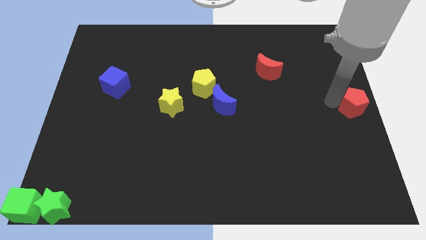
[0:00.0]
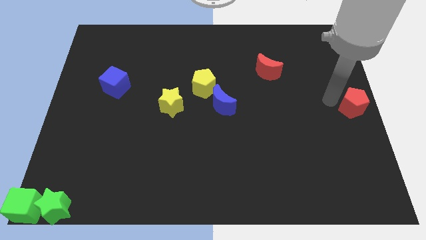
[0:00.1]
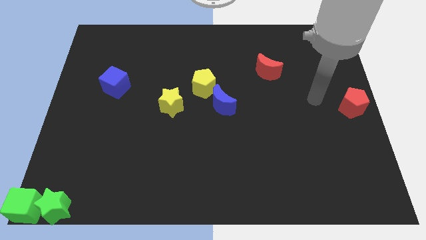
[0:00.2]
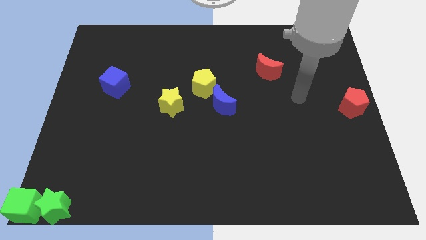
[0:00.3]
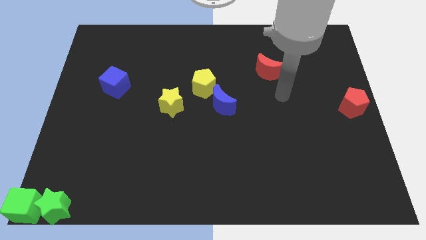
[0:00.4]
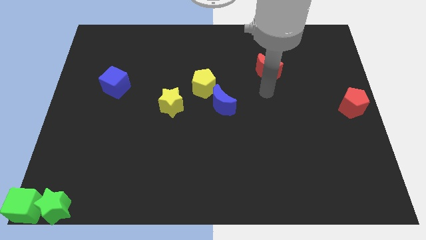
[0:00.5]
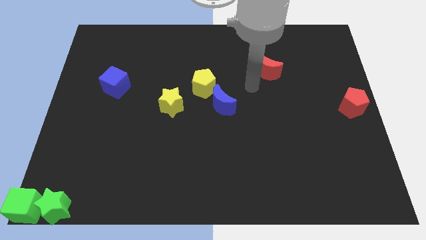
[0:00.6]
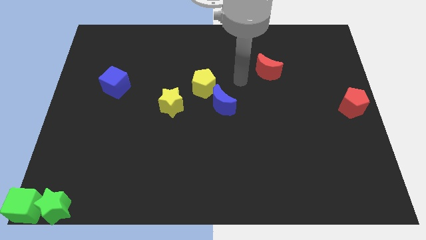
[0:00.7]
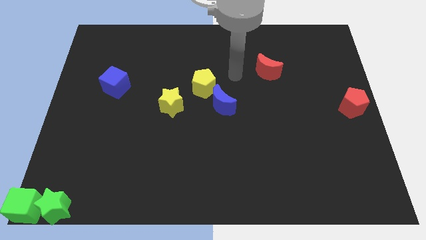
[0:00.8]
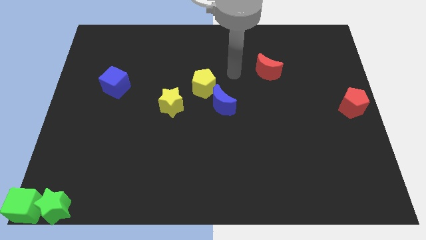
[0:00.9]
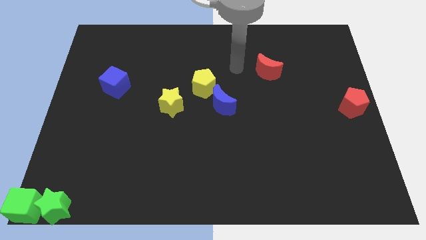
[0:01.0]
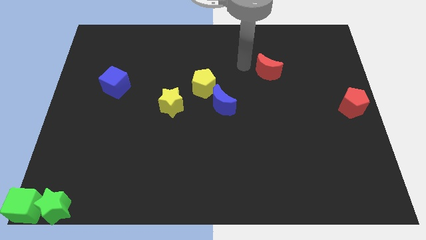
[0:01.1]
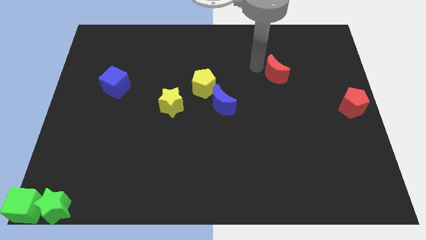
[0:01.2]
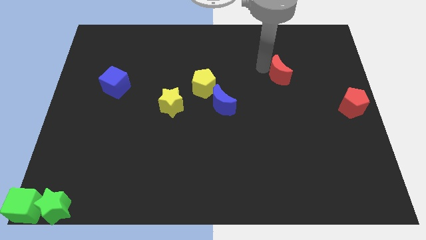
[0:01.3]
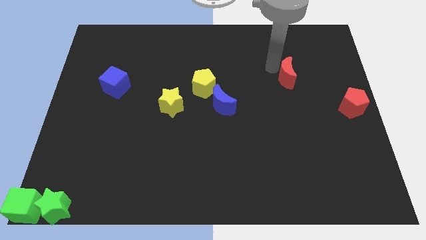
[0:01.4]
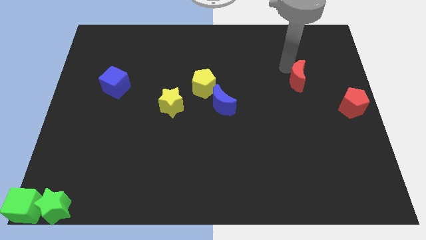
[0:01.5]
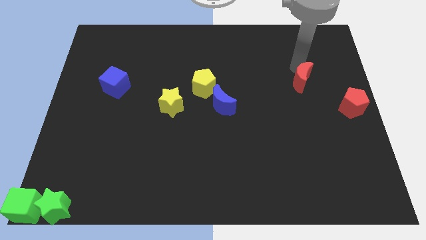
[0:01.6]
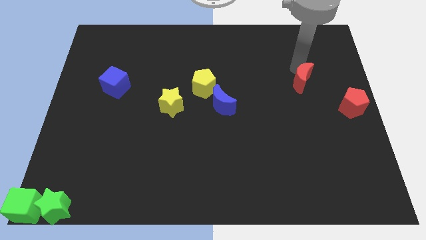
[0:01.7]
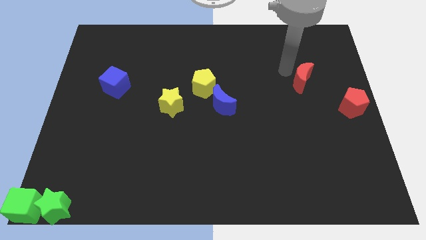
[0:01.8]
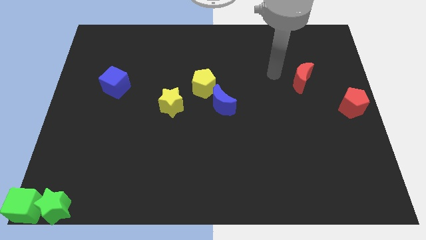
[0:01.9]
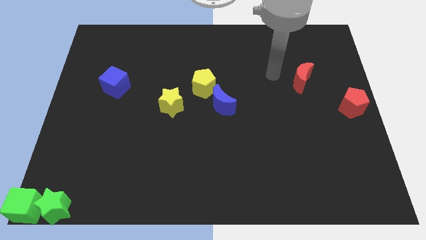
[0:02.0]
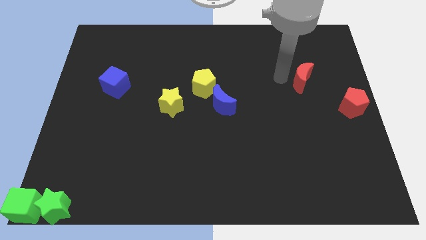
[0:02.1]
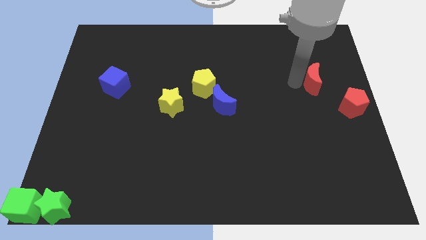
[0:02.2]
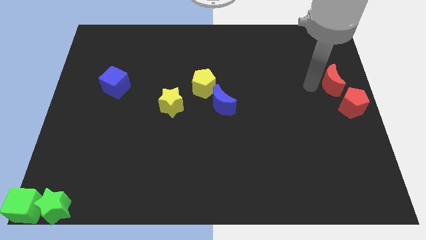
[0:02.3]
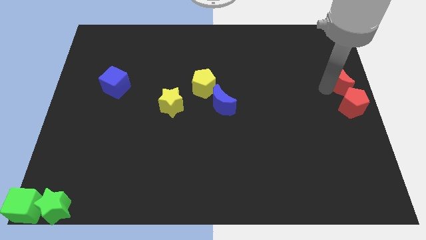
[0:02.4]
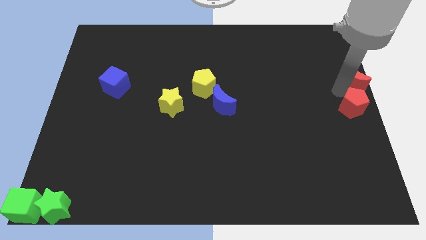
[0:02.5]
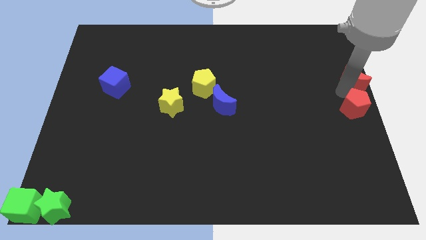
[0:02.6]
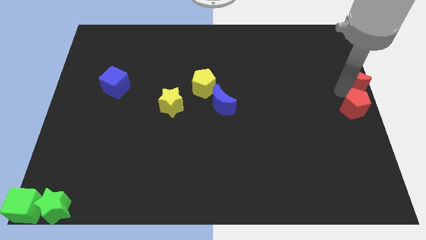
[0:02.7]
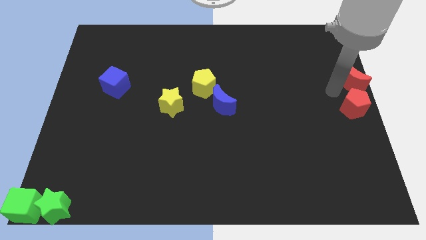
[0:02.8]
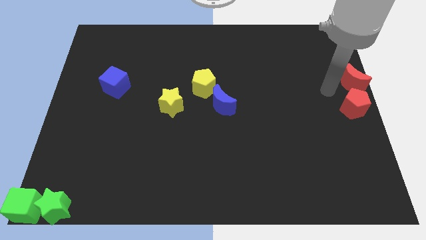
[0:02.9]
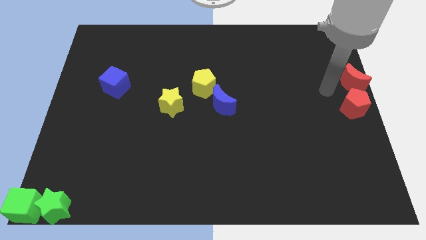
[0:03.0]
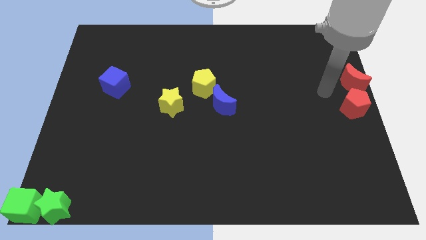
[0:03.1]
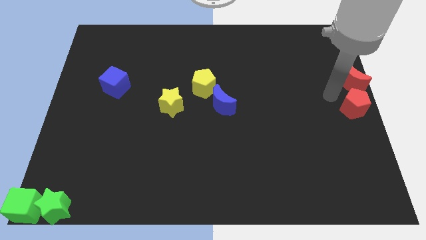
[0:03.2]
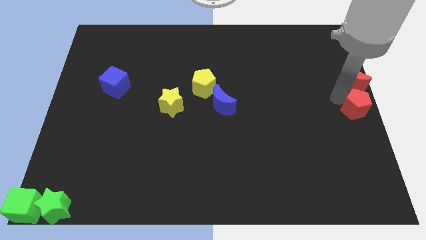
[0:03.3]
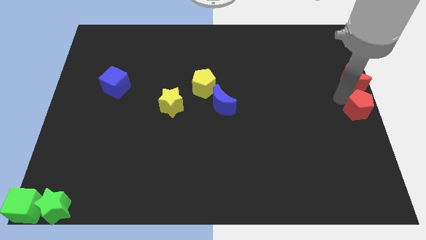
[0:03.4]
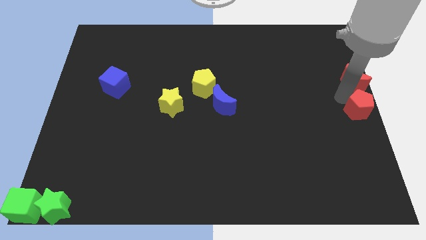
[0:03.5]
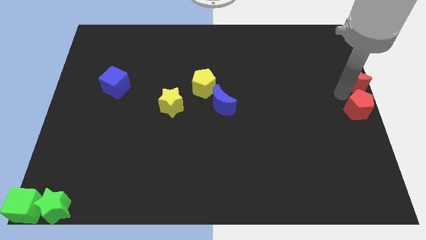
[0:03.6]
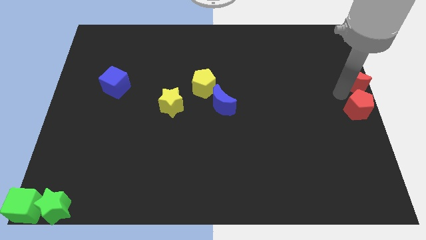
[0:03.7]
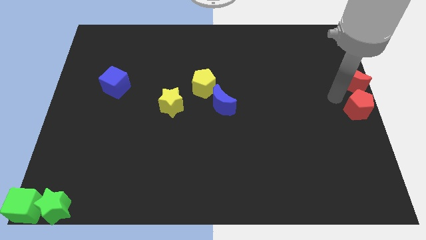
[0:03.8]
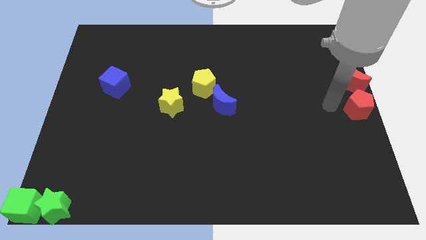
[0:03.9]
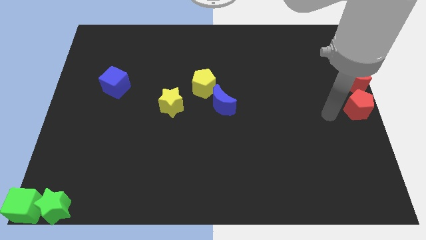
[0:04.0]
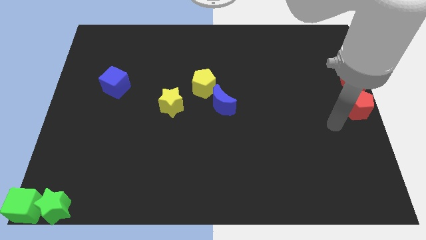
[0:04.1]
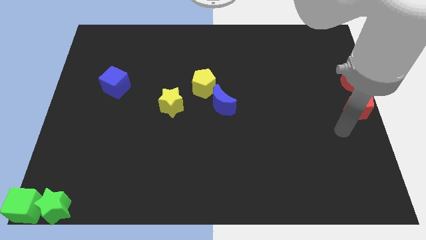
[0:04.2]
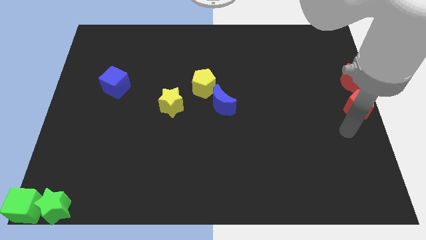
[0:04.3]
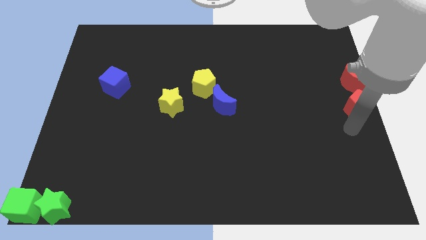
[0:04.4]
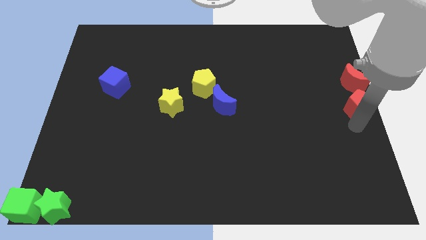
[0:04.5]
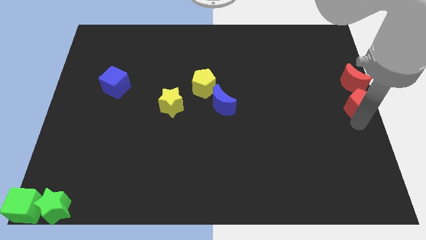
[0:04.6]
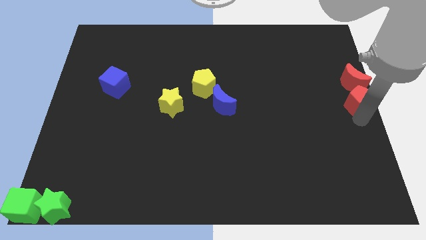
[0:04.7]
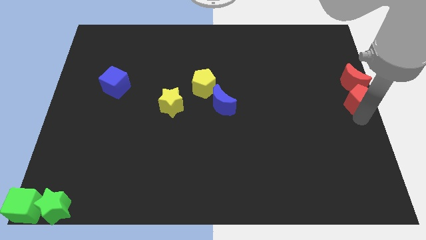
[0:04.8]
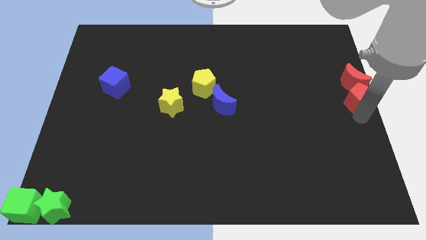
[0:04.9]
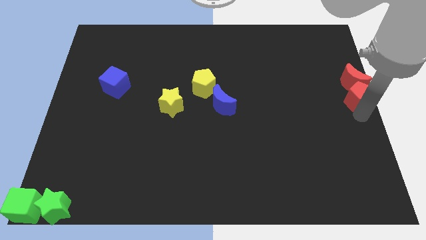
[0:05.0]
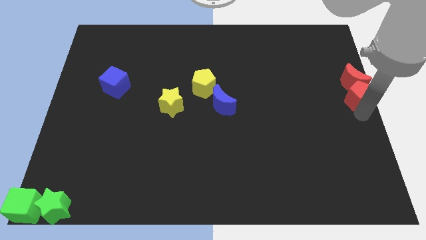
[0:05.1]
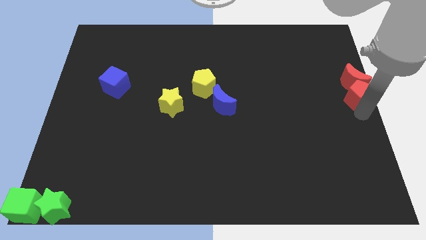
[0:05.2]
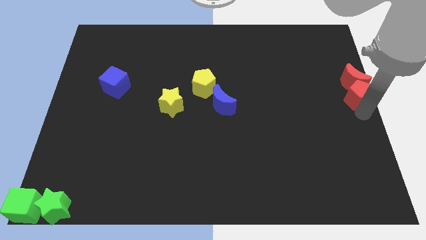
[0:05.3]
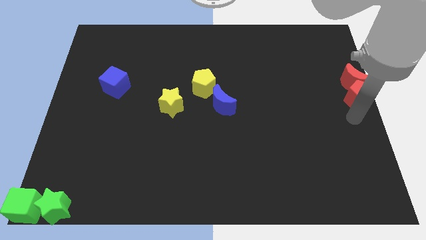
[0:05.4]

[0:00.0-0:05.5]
put the red crescent and red pentagon together at the right side of the table

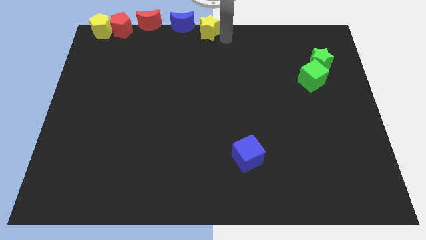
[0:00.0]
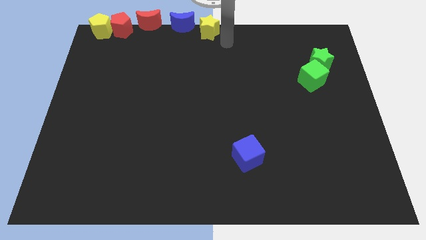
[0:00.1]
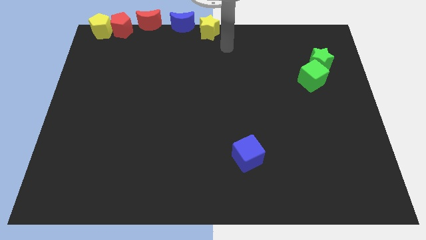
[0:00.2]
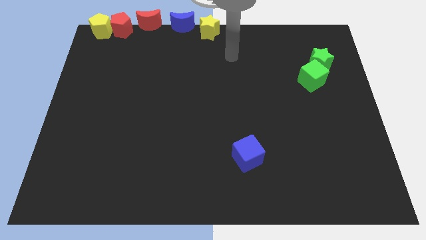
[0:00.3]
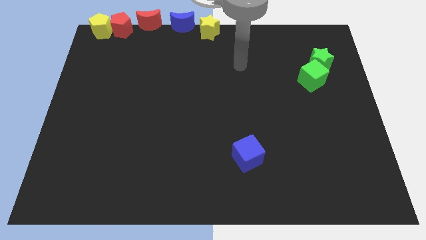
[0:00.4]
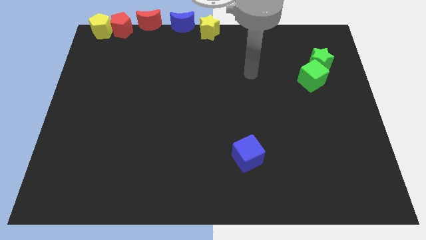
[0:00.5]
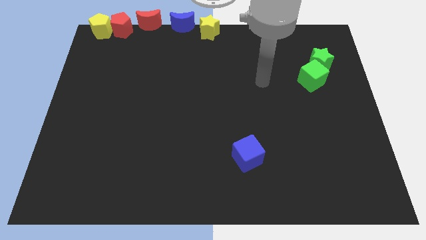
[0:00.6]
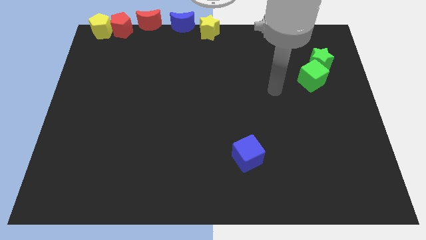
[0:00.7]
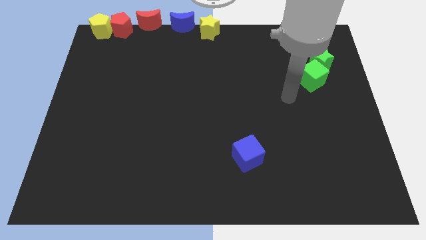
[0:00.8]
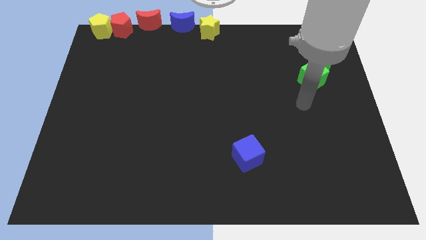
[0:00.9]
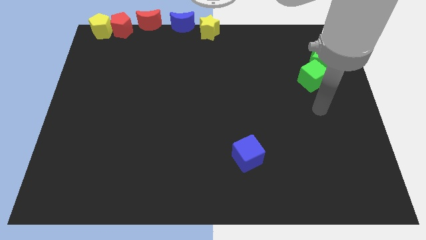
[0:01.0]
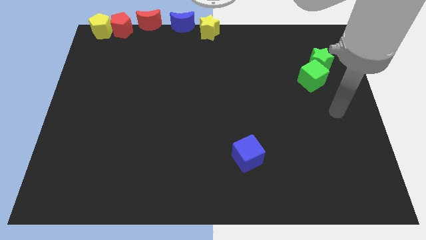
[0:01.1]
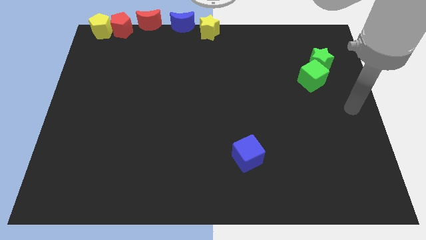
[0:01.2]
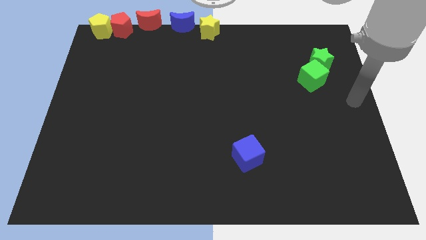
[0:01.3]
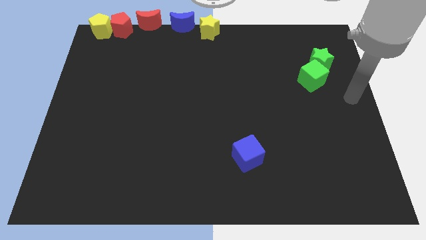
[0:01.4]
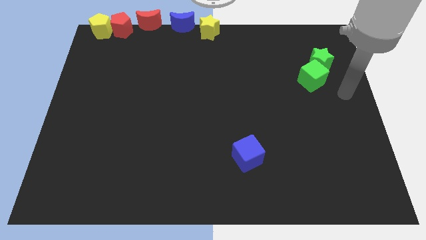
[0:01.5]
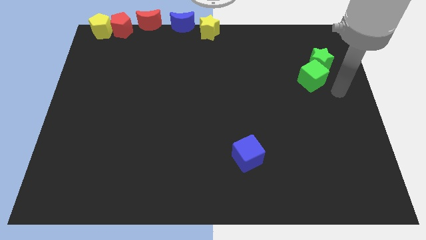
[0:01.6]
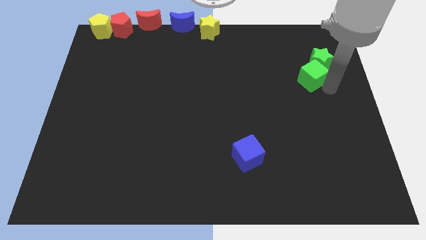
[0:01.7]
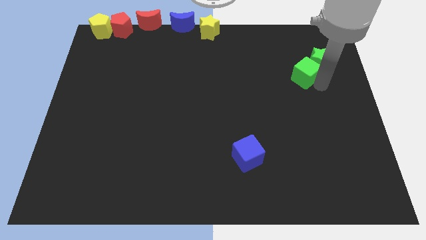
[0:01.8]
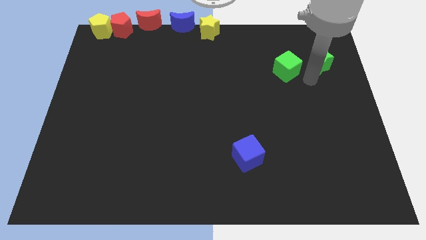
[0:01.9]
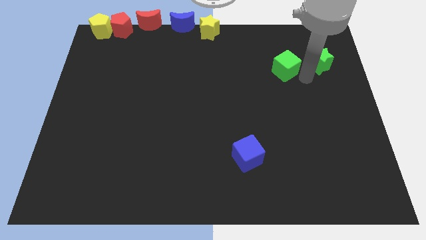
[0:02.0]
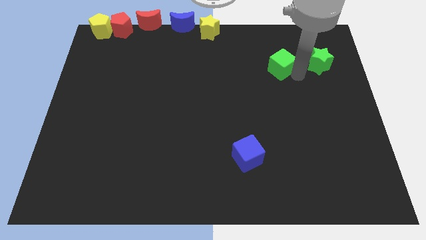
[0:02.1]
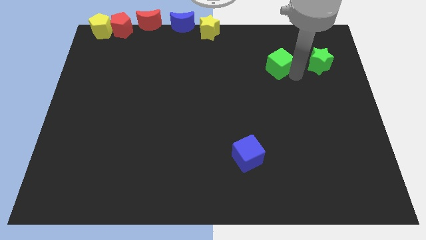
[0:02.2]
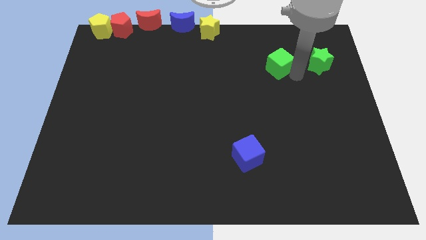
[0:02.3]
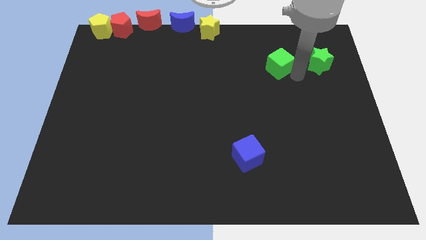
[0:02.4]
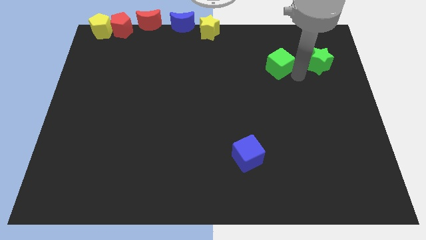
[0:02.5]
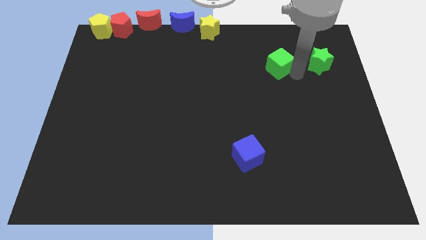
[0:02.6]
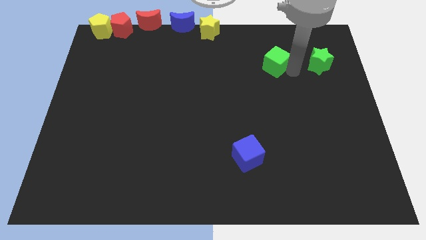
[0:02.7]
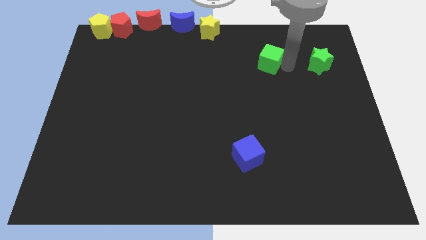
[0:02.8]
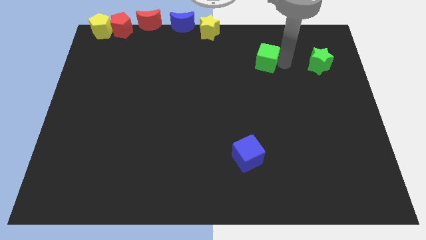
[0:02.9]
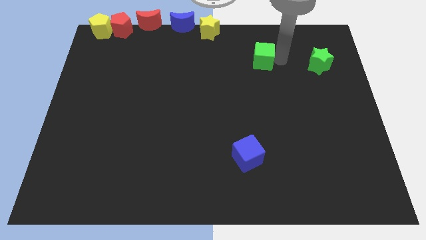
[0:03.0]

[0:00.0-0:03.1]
push the green cube to the top left of the blue cube

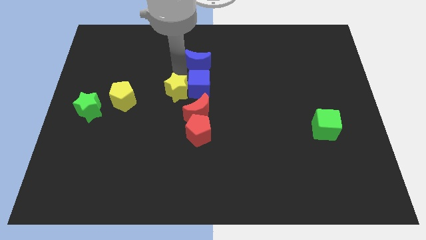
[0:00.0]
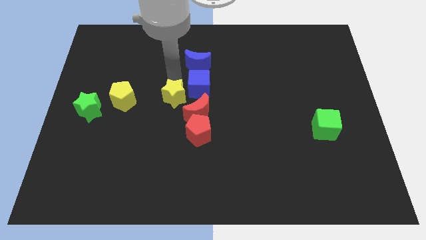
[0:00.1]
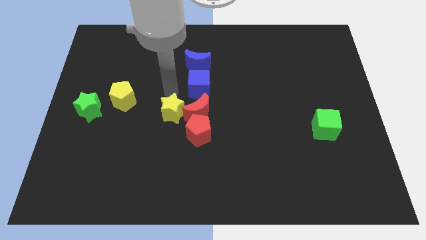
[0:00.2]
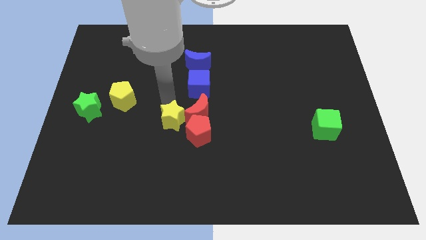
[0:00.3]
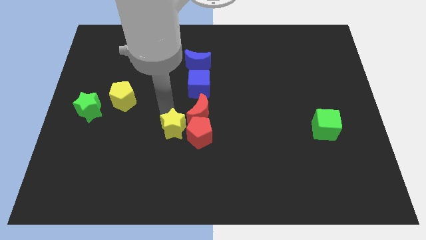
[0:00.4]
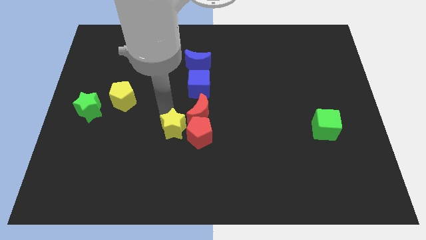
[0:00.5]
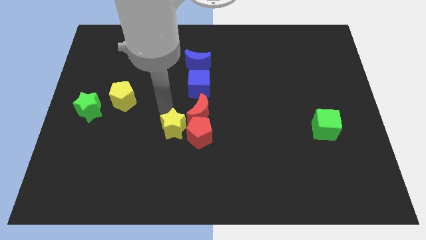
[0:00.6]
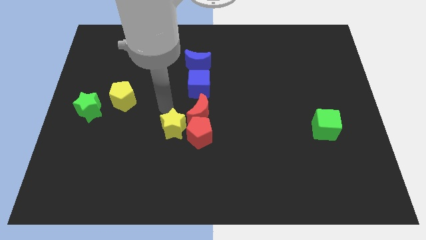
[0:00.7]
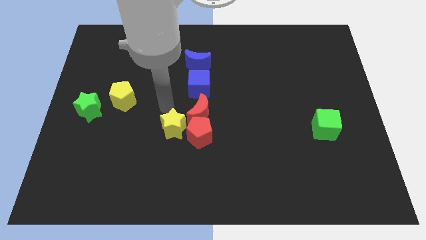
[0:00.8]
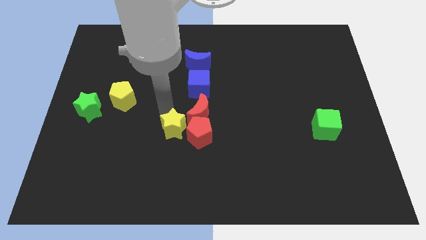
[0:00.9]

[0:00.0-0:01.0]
place yellow star left to red moon and red pentagon
